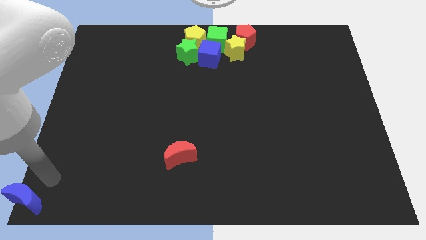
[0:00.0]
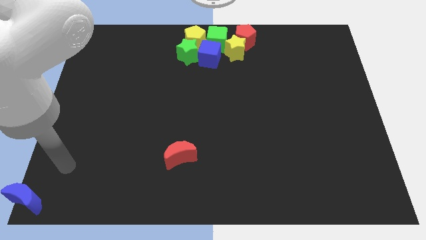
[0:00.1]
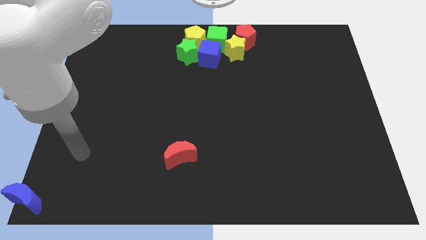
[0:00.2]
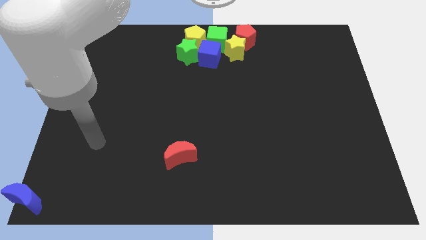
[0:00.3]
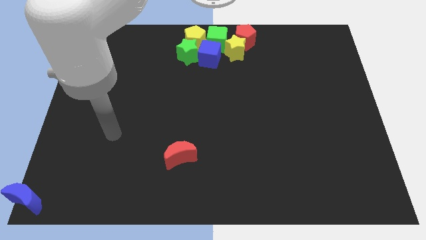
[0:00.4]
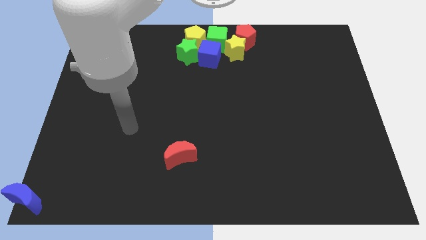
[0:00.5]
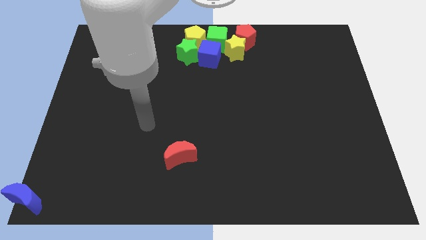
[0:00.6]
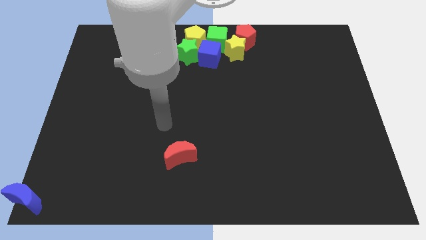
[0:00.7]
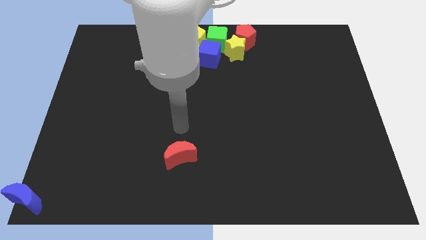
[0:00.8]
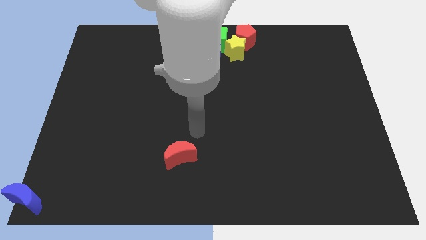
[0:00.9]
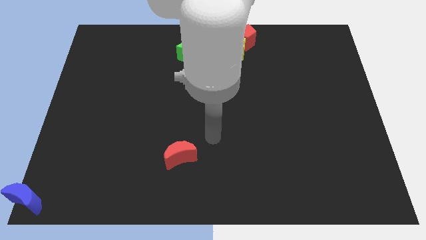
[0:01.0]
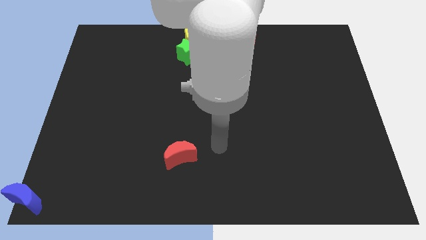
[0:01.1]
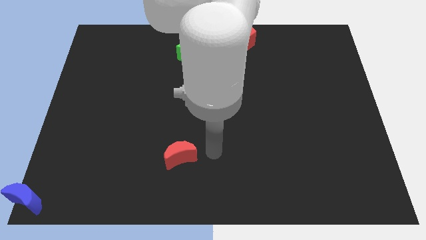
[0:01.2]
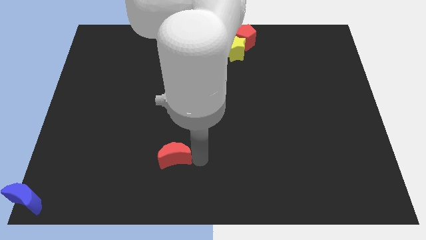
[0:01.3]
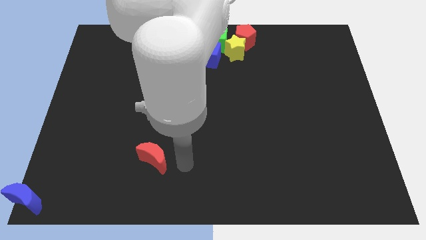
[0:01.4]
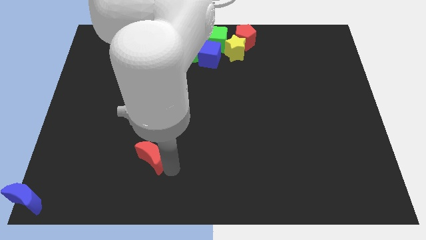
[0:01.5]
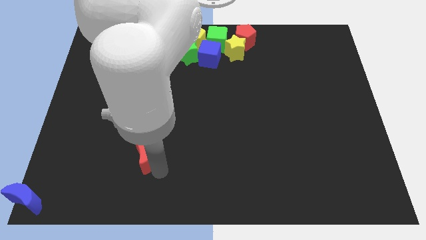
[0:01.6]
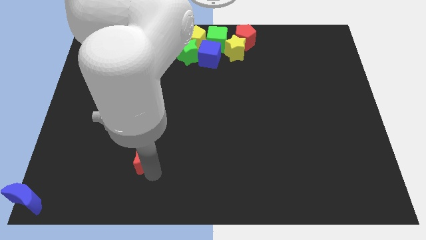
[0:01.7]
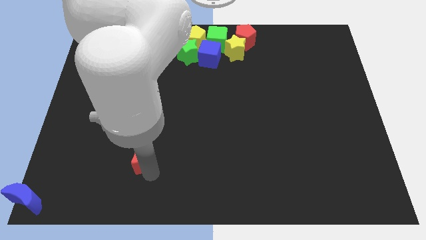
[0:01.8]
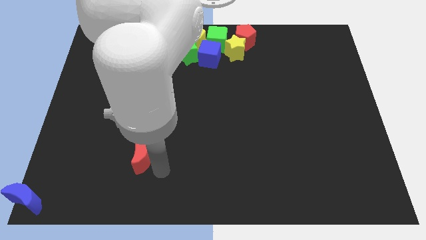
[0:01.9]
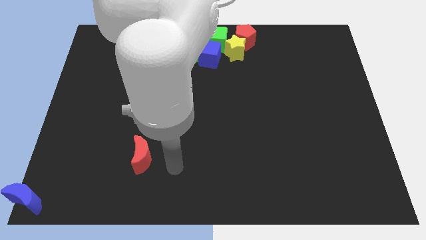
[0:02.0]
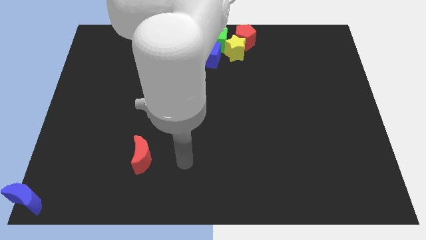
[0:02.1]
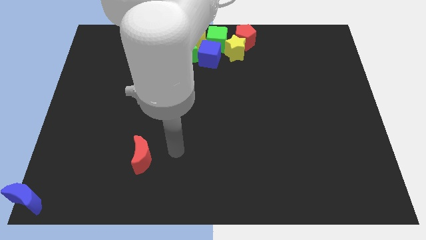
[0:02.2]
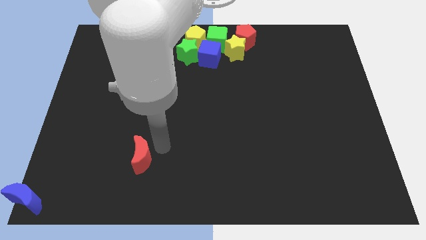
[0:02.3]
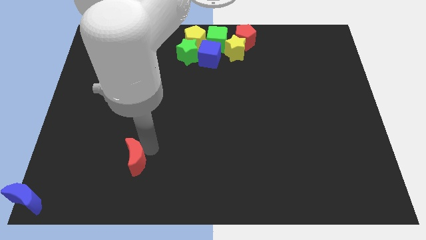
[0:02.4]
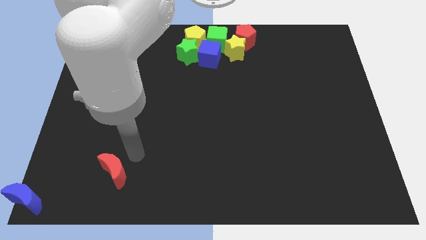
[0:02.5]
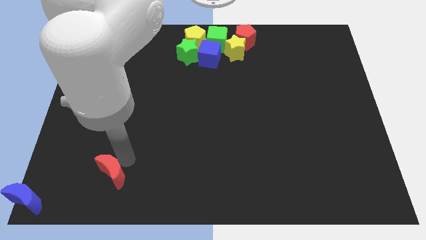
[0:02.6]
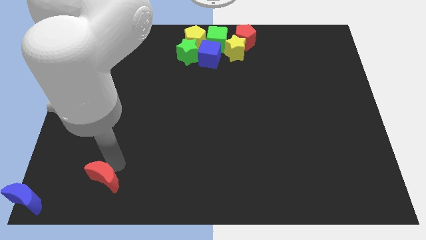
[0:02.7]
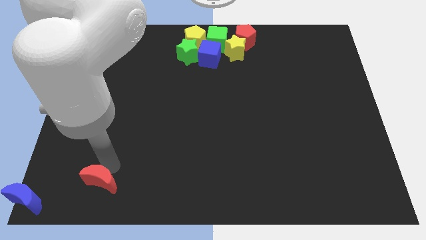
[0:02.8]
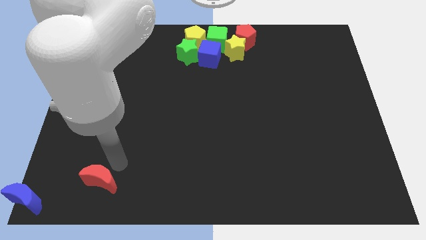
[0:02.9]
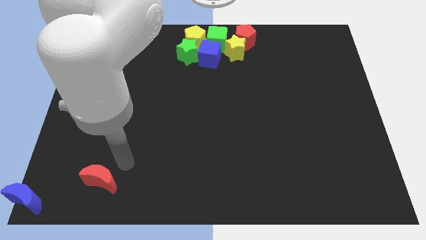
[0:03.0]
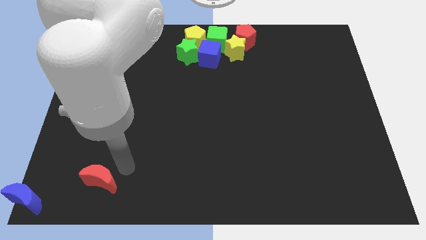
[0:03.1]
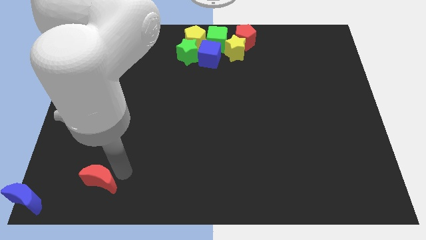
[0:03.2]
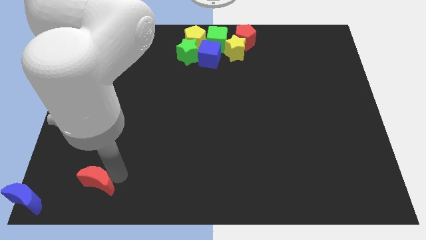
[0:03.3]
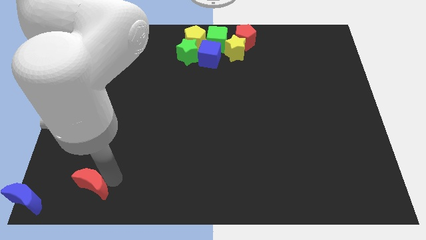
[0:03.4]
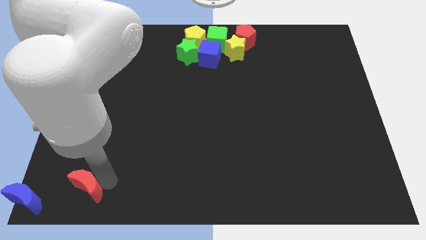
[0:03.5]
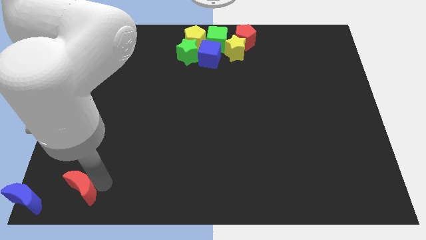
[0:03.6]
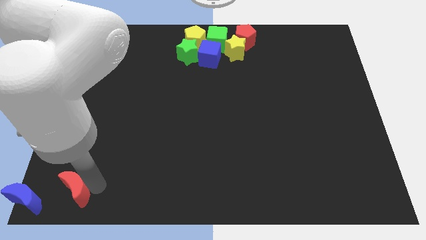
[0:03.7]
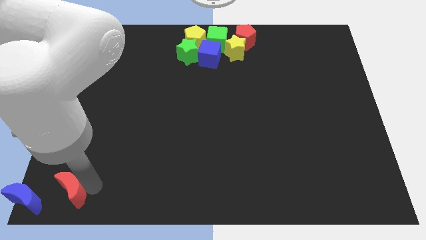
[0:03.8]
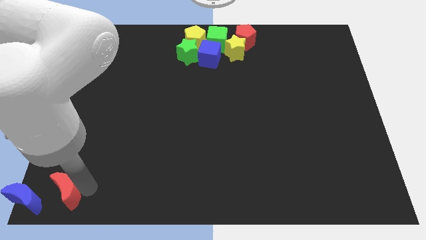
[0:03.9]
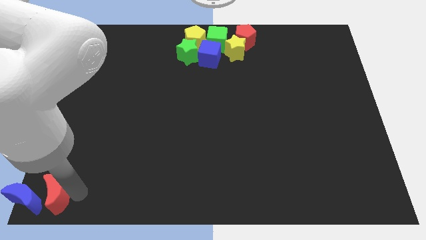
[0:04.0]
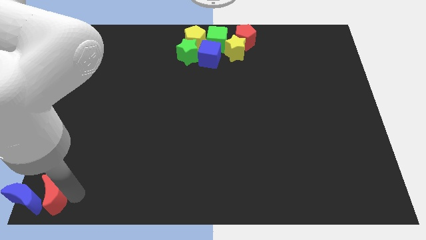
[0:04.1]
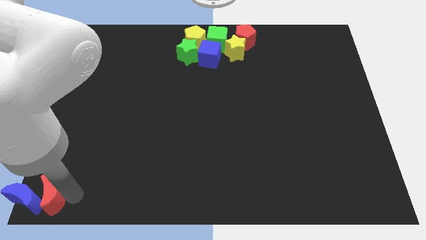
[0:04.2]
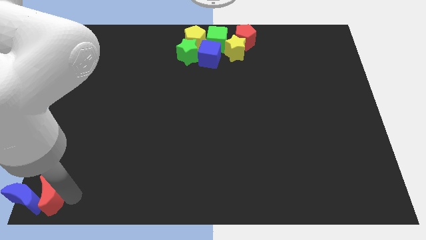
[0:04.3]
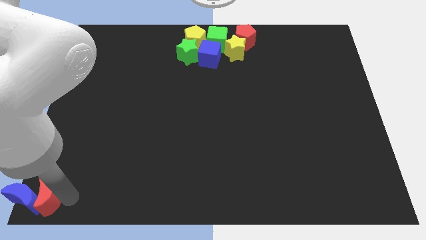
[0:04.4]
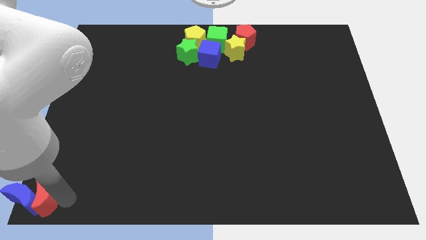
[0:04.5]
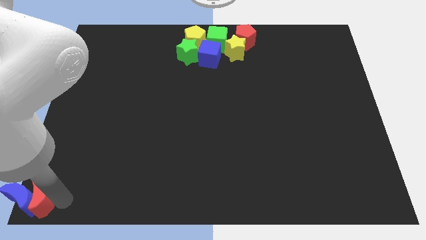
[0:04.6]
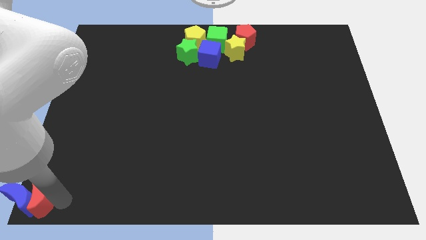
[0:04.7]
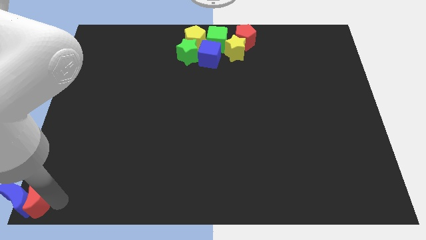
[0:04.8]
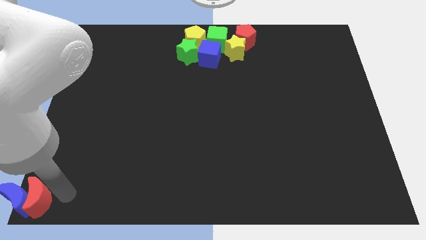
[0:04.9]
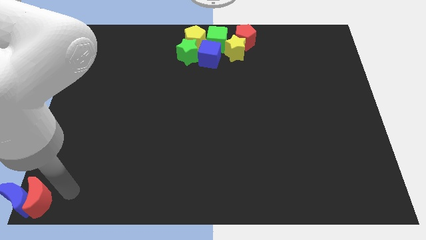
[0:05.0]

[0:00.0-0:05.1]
push the red crescent towards the blue crescent

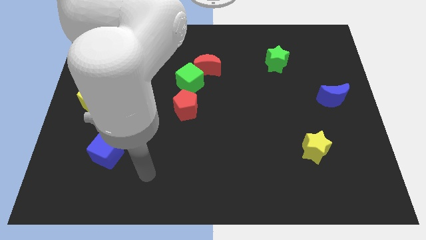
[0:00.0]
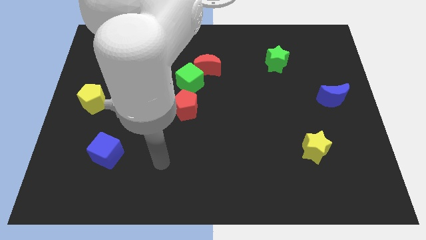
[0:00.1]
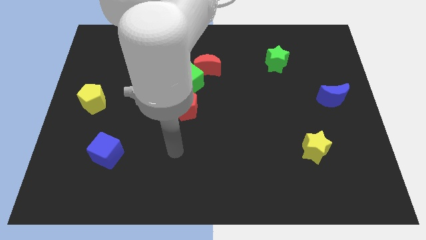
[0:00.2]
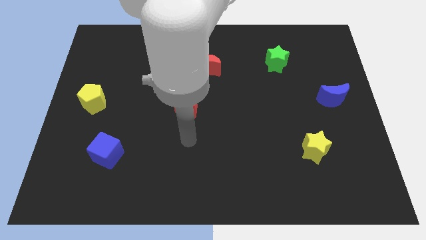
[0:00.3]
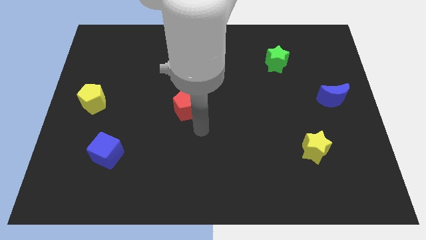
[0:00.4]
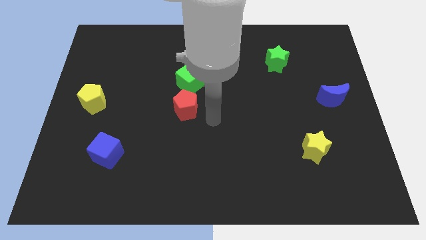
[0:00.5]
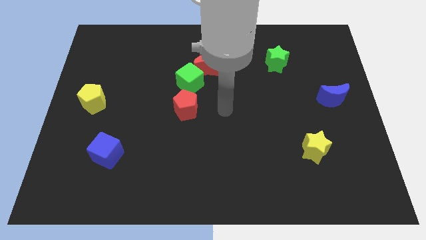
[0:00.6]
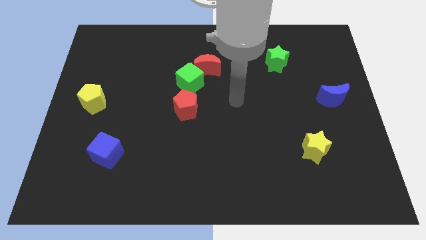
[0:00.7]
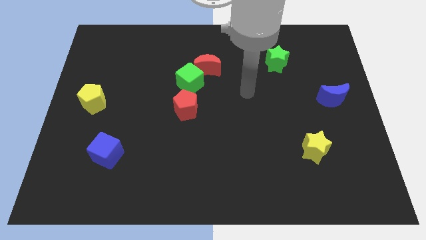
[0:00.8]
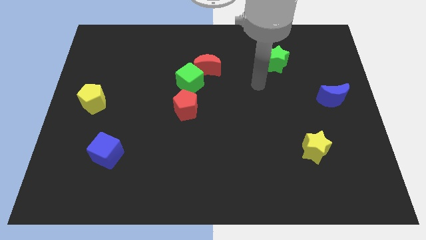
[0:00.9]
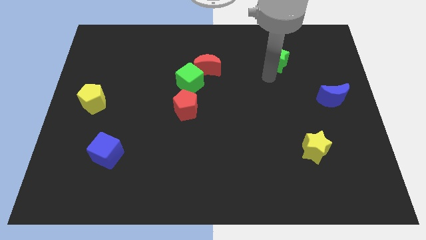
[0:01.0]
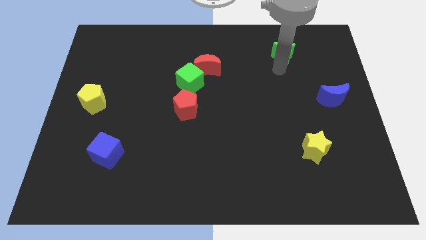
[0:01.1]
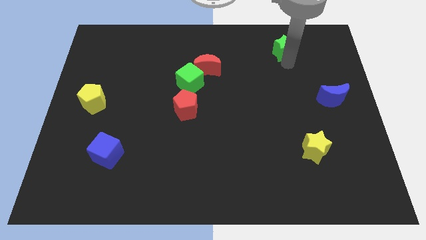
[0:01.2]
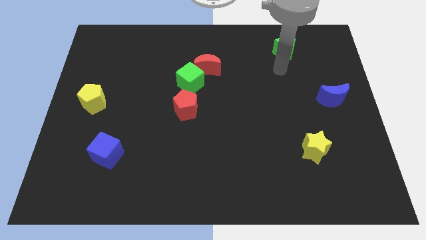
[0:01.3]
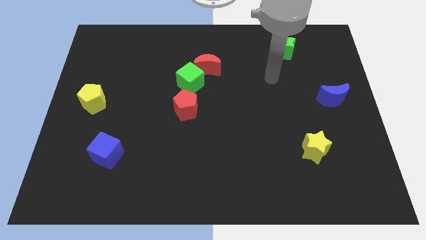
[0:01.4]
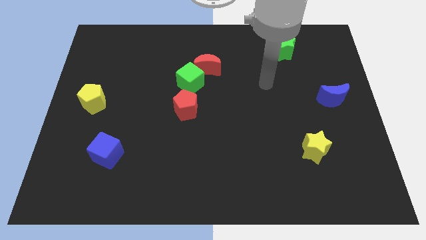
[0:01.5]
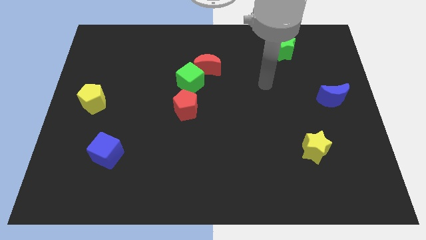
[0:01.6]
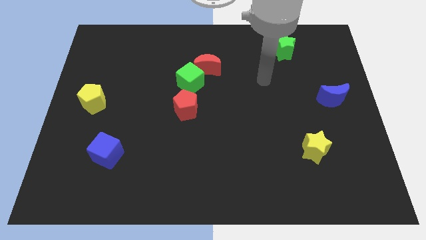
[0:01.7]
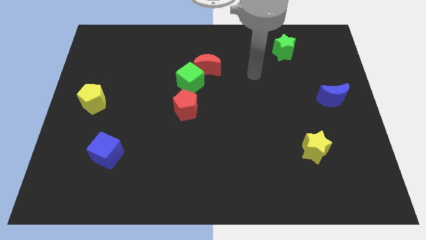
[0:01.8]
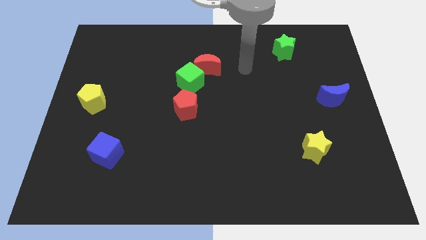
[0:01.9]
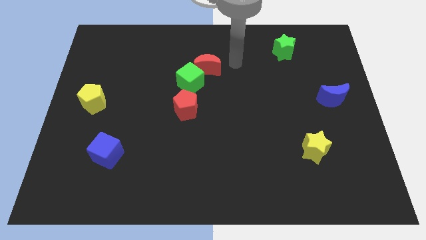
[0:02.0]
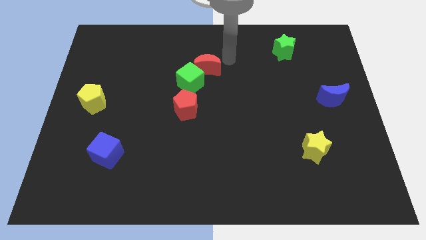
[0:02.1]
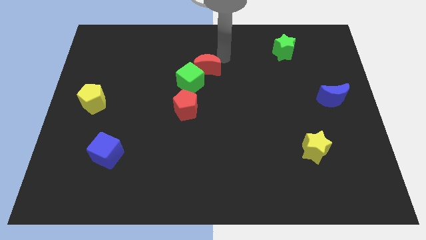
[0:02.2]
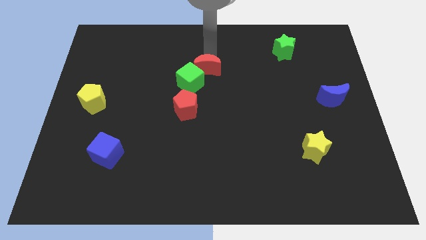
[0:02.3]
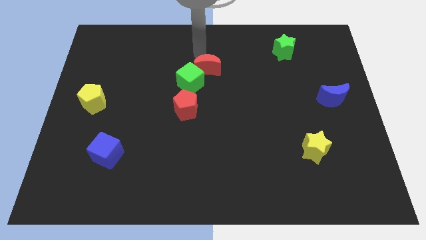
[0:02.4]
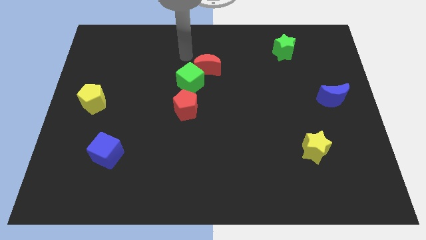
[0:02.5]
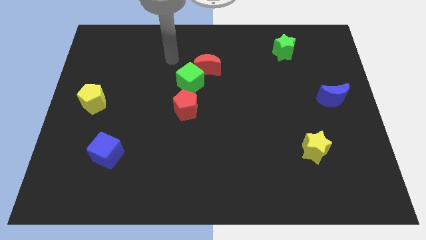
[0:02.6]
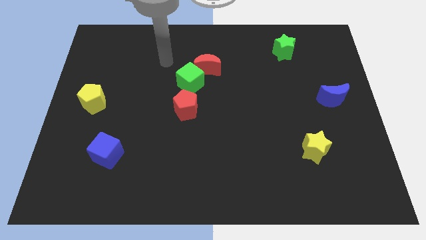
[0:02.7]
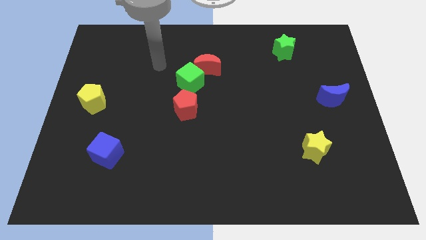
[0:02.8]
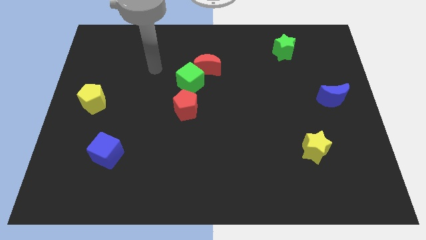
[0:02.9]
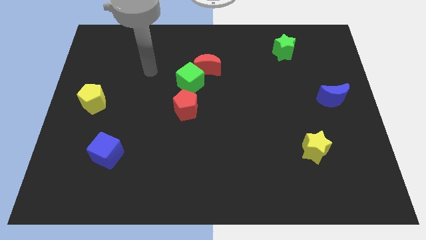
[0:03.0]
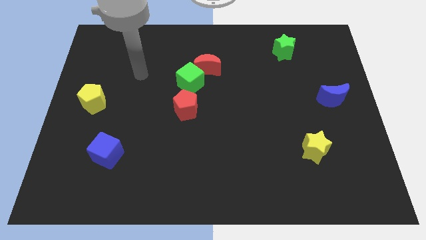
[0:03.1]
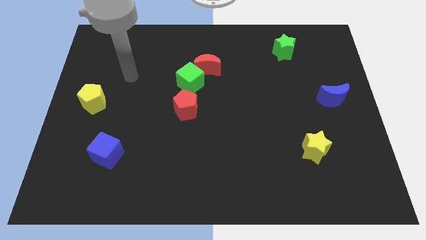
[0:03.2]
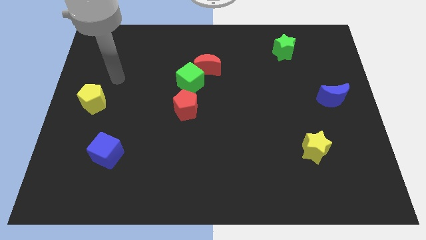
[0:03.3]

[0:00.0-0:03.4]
move the green star slightly upwards

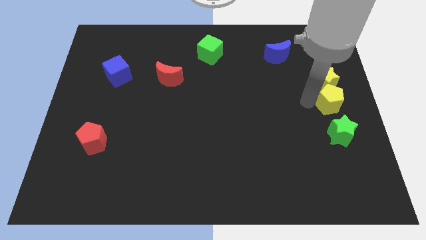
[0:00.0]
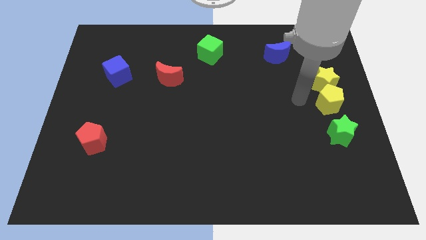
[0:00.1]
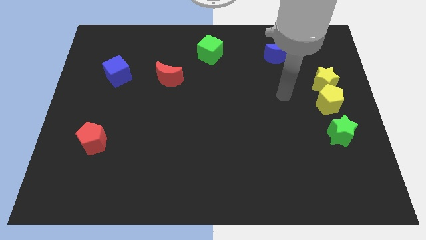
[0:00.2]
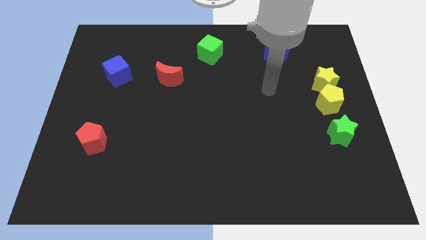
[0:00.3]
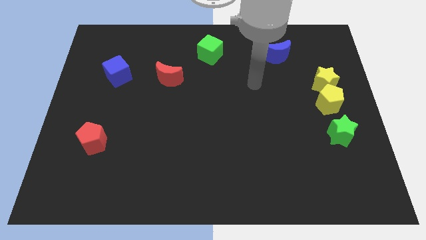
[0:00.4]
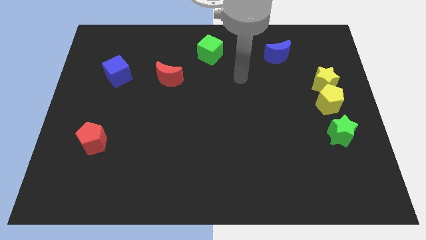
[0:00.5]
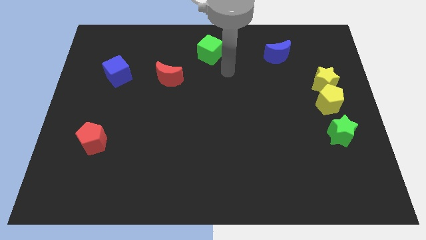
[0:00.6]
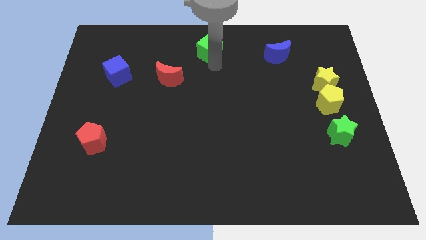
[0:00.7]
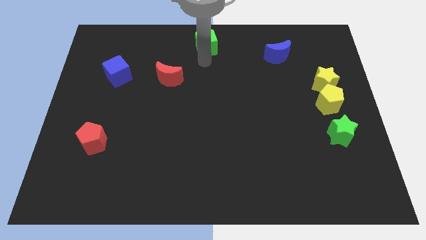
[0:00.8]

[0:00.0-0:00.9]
push the green cube slightly up
